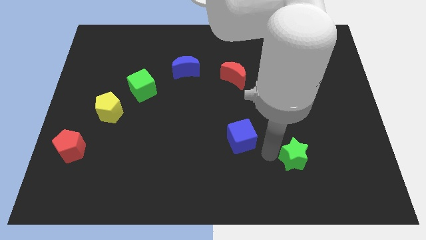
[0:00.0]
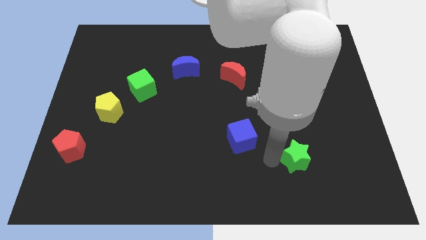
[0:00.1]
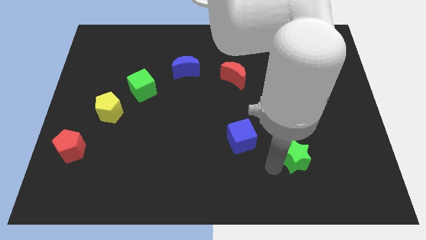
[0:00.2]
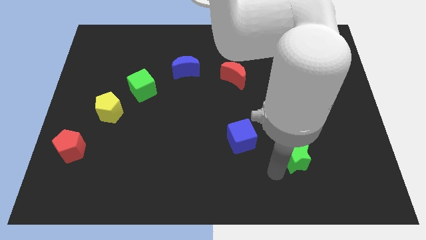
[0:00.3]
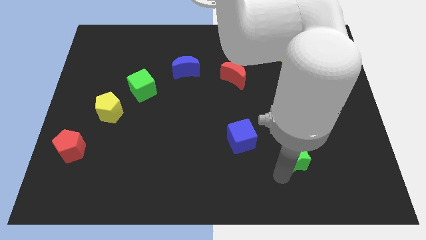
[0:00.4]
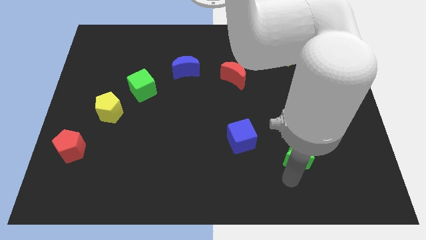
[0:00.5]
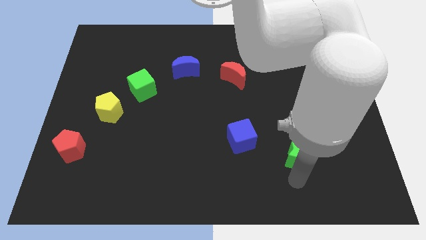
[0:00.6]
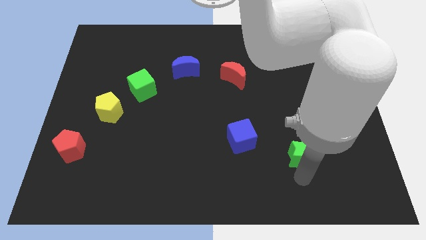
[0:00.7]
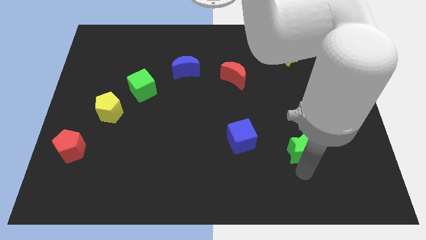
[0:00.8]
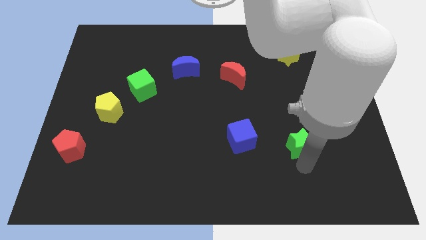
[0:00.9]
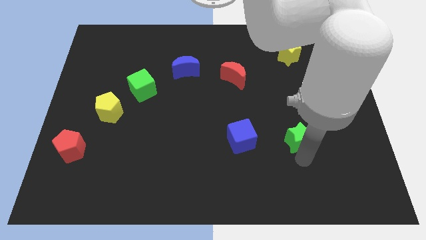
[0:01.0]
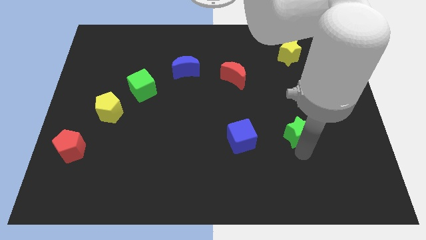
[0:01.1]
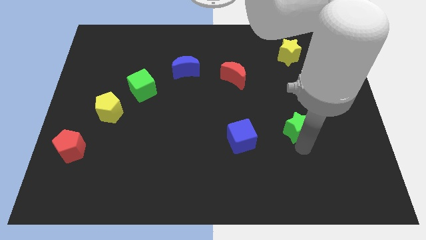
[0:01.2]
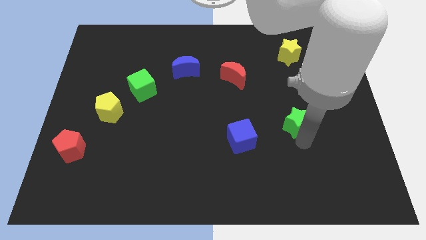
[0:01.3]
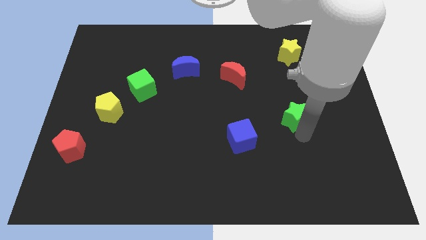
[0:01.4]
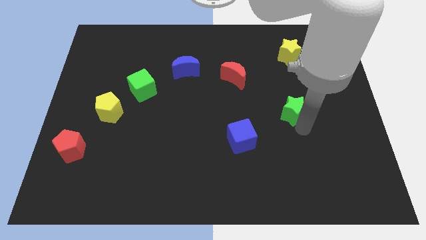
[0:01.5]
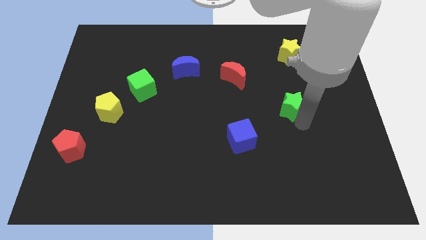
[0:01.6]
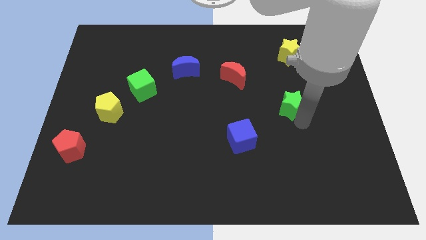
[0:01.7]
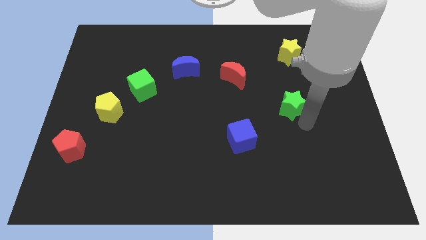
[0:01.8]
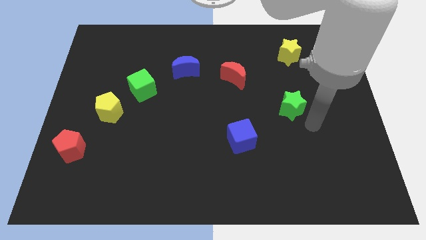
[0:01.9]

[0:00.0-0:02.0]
place the green star vertically below the yellow star

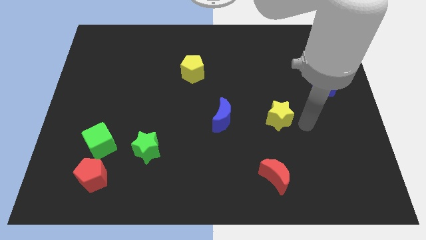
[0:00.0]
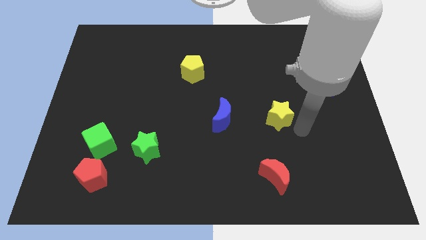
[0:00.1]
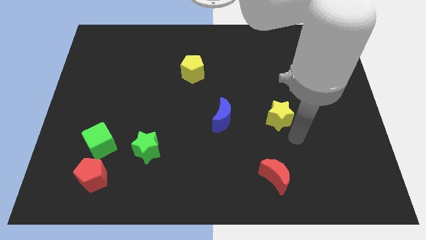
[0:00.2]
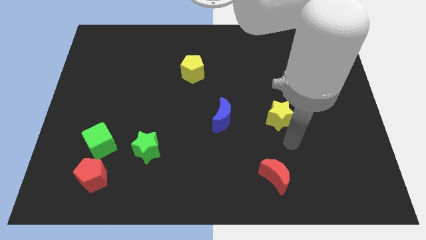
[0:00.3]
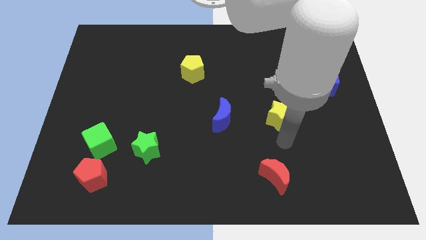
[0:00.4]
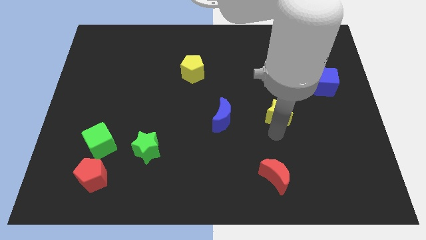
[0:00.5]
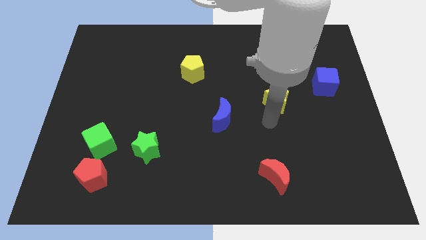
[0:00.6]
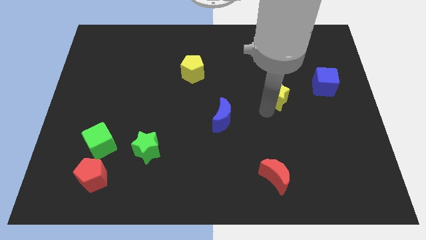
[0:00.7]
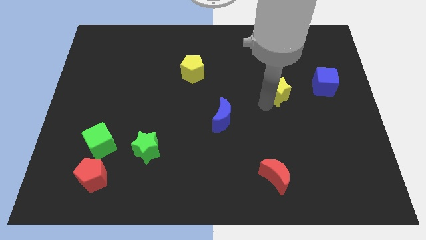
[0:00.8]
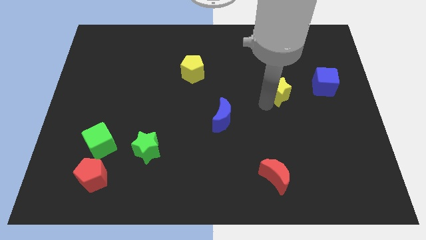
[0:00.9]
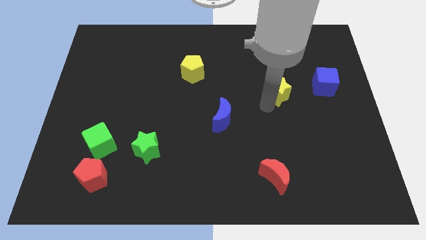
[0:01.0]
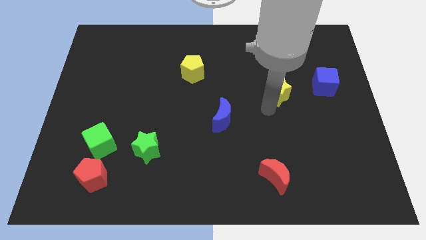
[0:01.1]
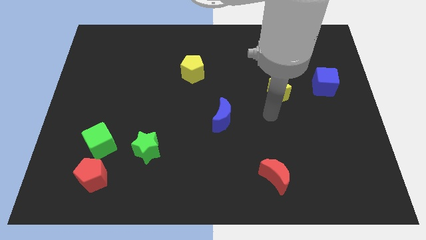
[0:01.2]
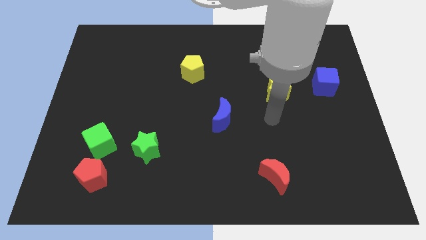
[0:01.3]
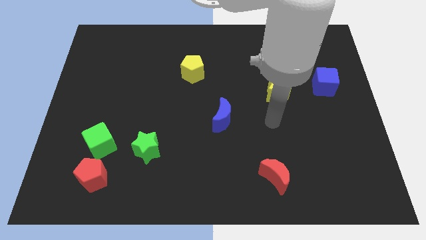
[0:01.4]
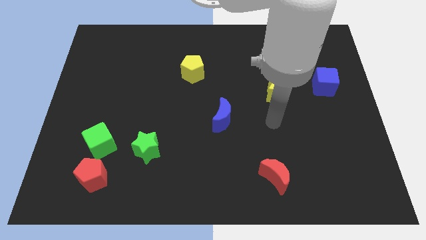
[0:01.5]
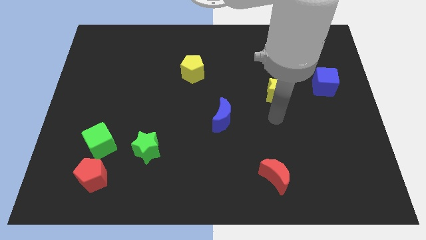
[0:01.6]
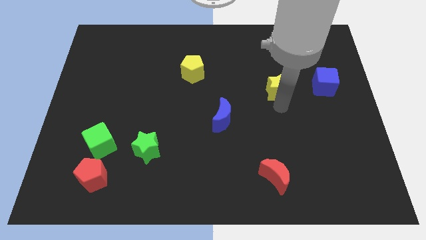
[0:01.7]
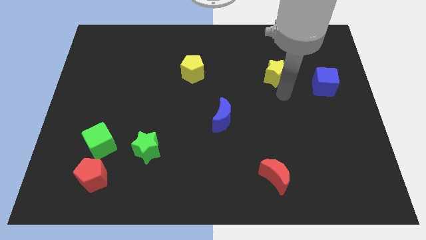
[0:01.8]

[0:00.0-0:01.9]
place the yellow star to the left side of the blue cube

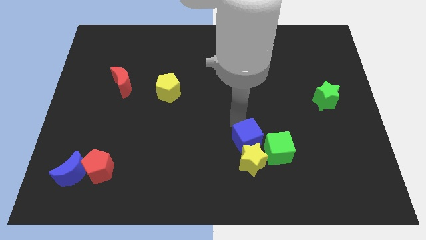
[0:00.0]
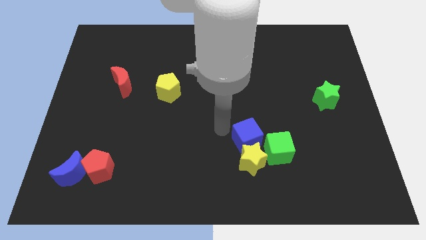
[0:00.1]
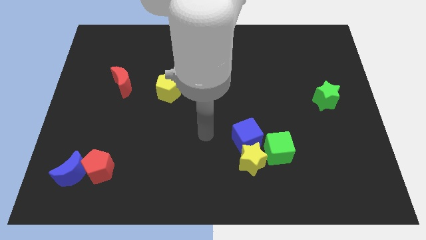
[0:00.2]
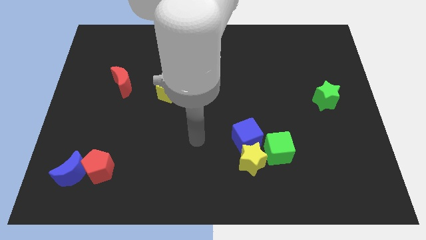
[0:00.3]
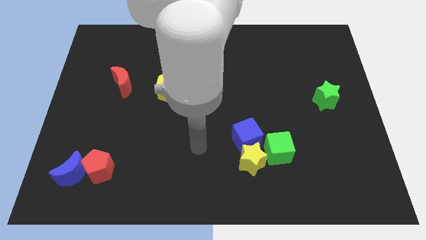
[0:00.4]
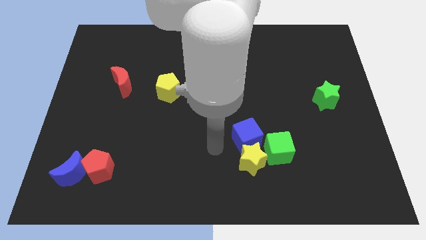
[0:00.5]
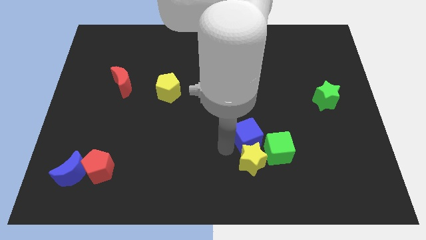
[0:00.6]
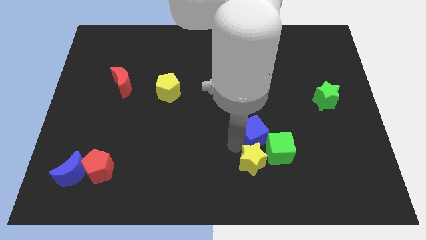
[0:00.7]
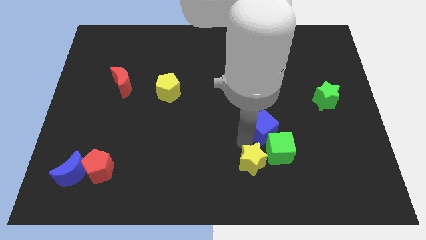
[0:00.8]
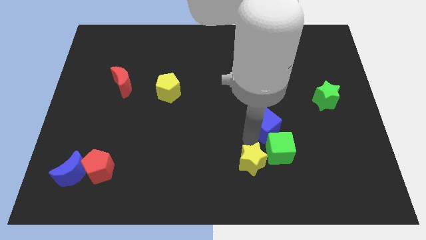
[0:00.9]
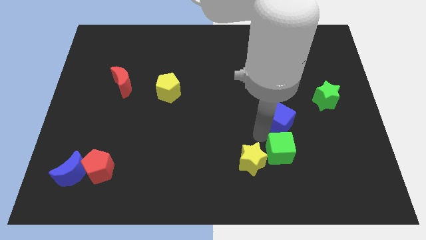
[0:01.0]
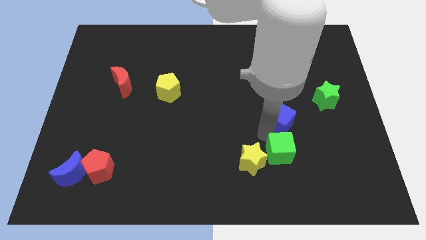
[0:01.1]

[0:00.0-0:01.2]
move the blue cube to the top of the green cube

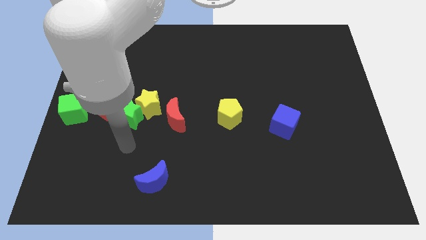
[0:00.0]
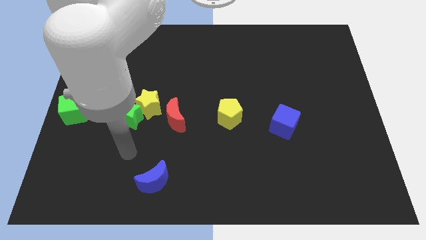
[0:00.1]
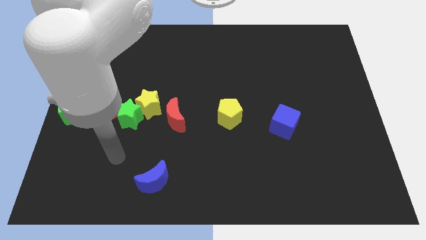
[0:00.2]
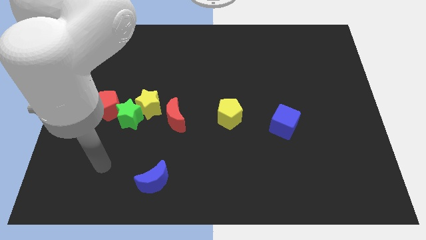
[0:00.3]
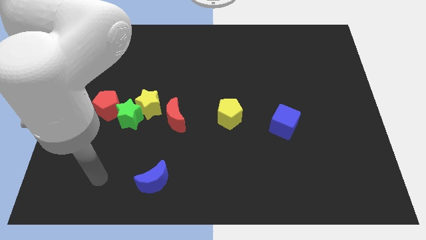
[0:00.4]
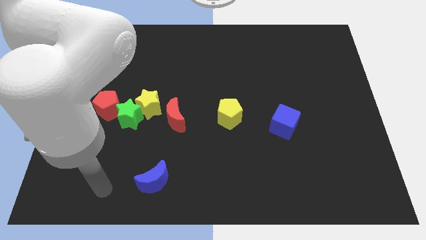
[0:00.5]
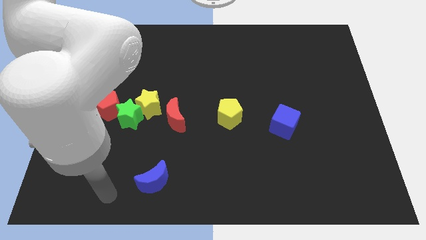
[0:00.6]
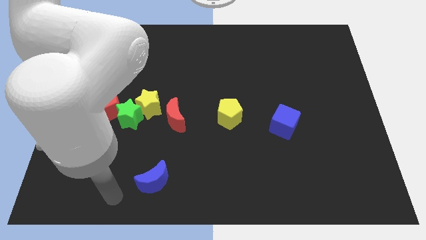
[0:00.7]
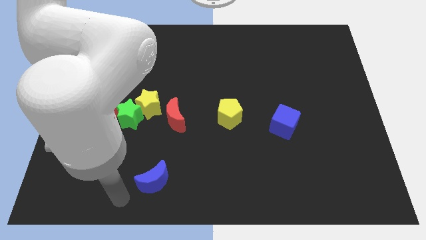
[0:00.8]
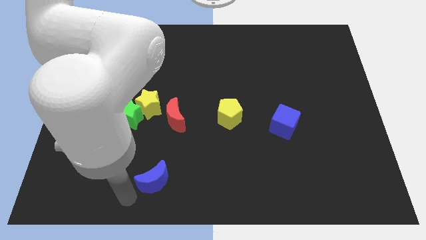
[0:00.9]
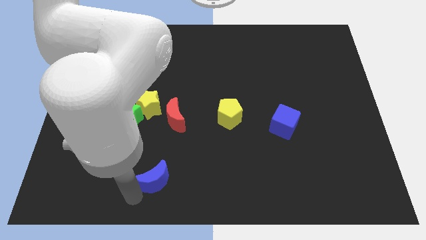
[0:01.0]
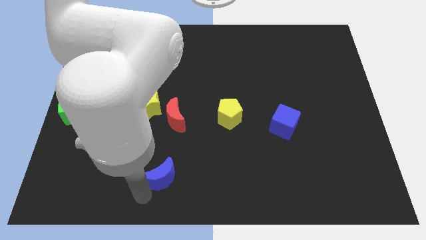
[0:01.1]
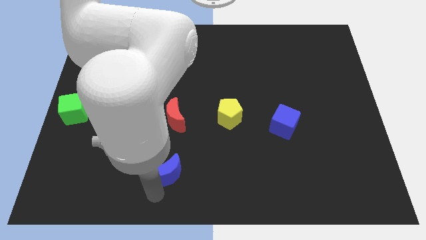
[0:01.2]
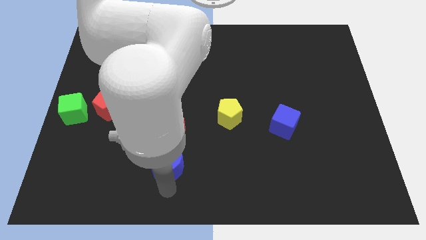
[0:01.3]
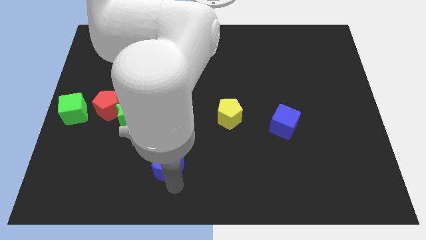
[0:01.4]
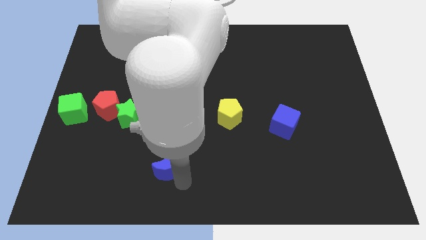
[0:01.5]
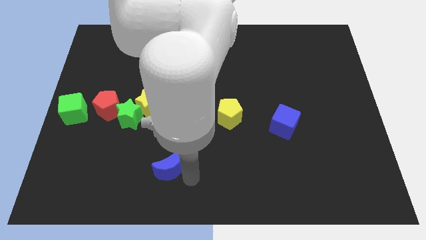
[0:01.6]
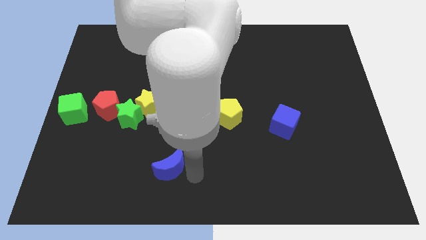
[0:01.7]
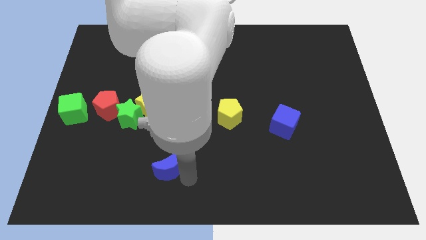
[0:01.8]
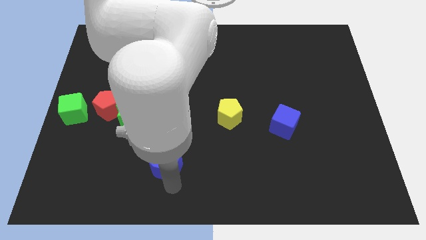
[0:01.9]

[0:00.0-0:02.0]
put the blue crescent underneath the red crescent

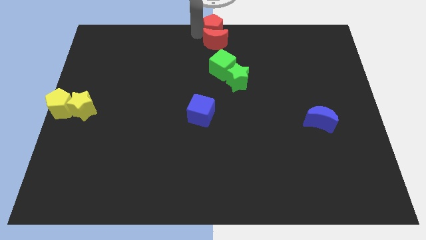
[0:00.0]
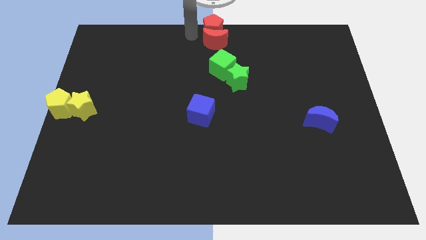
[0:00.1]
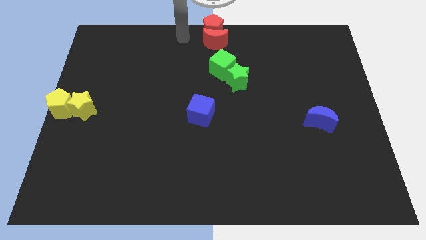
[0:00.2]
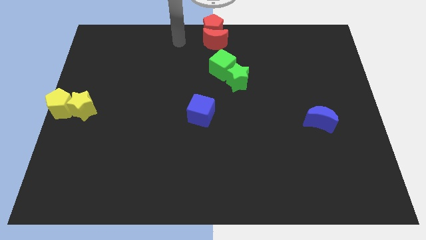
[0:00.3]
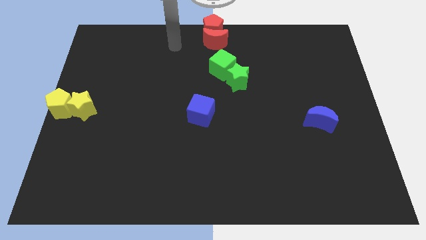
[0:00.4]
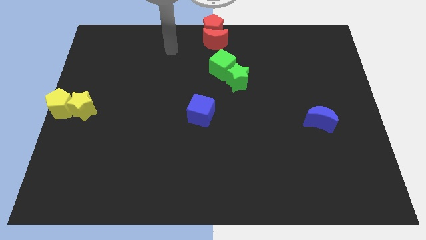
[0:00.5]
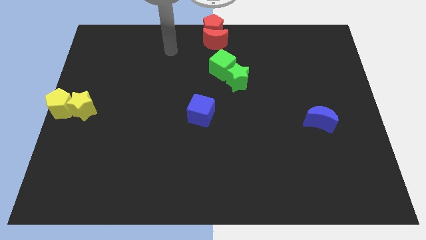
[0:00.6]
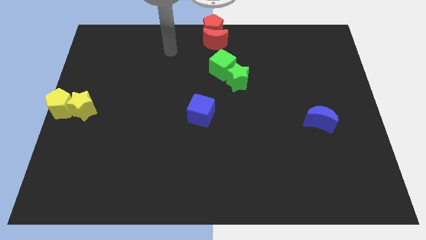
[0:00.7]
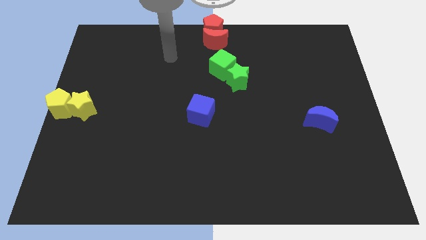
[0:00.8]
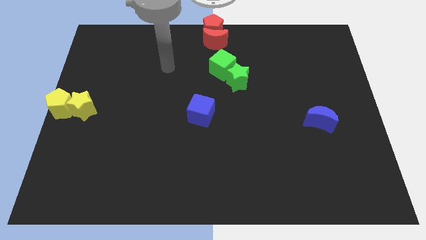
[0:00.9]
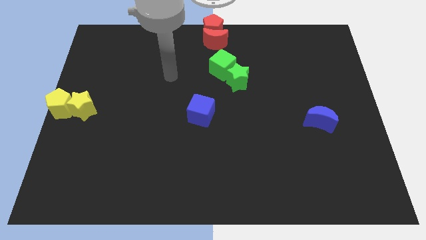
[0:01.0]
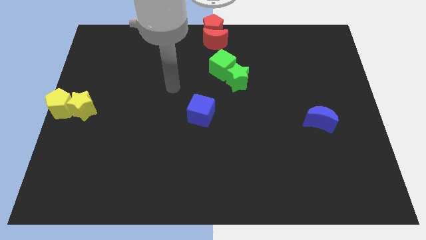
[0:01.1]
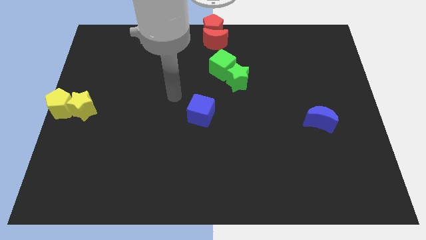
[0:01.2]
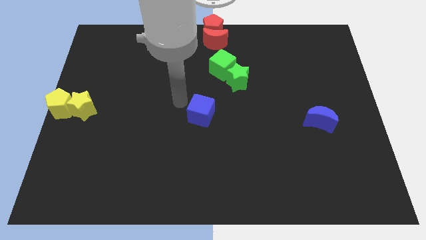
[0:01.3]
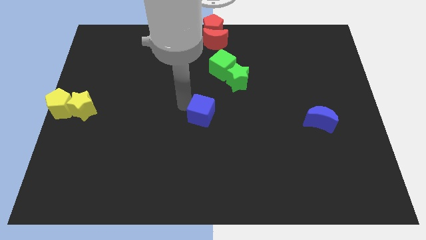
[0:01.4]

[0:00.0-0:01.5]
move your arm to the left of the blue cube

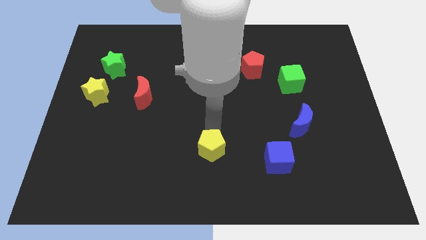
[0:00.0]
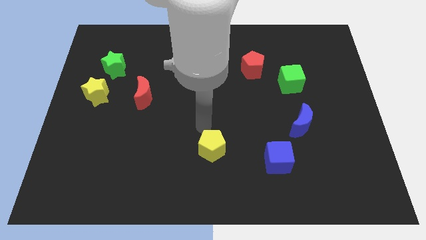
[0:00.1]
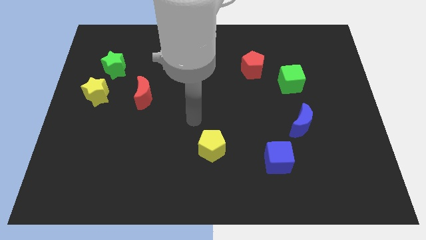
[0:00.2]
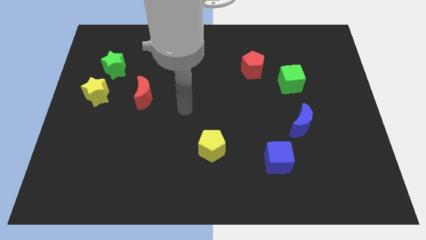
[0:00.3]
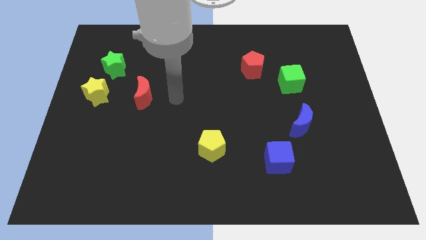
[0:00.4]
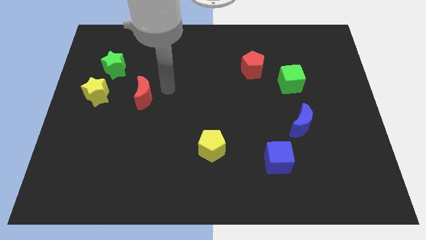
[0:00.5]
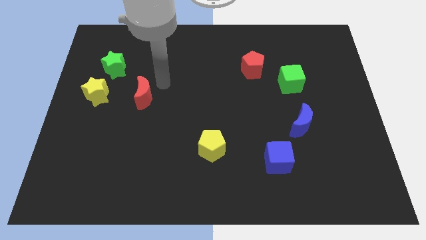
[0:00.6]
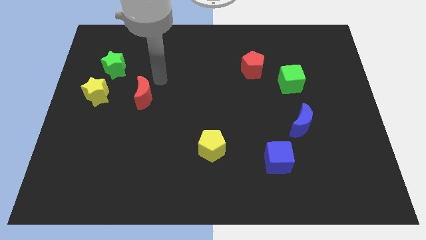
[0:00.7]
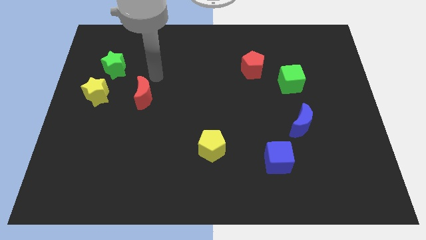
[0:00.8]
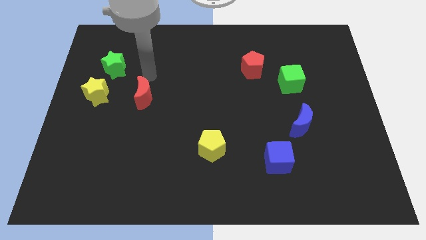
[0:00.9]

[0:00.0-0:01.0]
move your arm away from yellow pentagon
